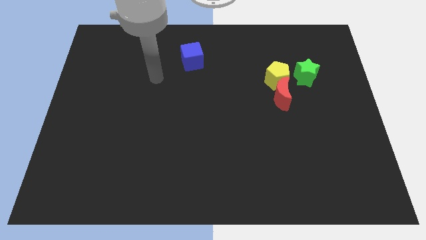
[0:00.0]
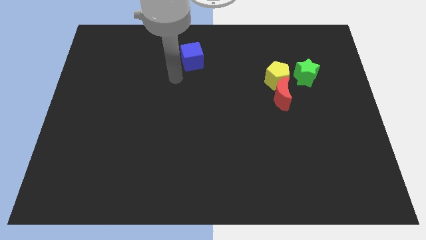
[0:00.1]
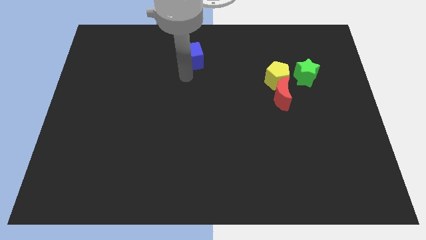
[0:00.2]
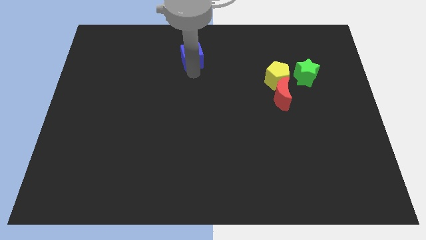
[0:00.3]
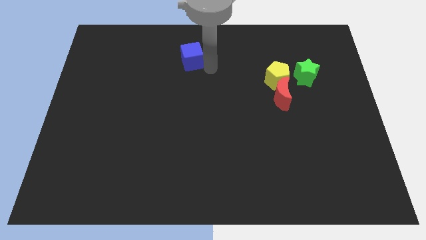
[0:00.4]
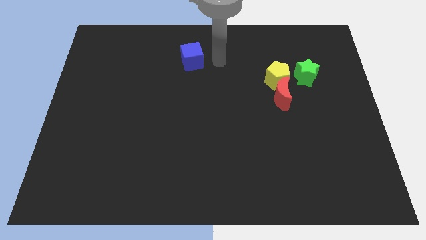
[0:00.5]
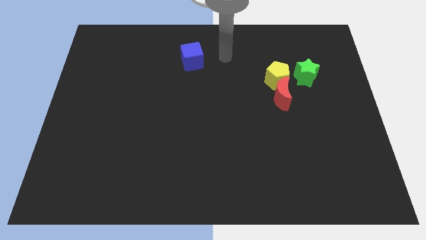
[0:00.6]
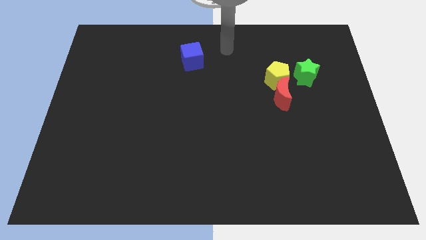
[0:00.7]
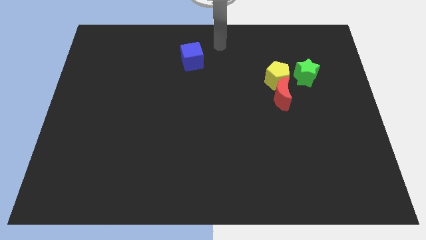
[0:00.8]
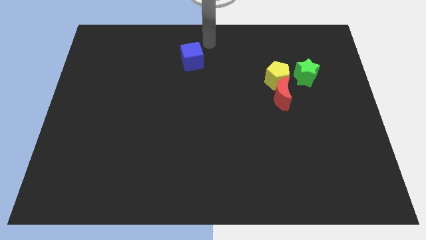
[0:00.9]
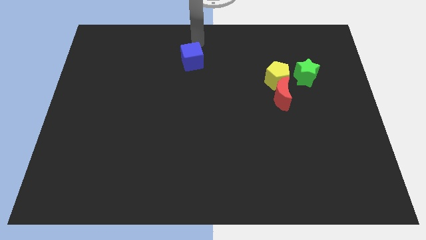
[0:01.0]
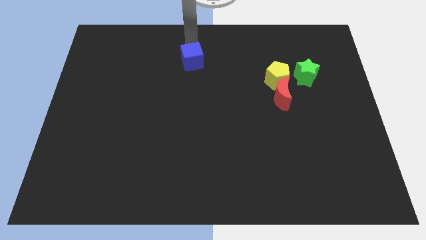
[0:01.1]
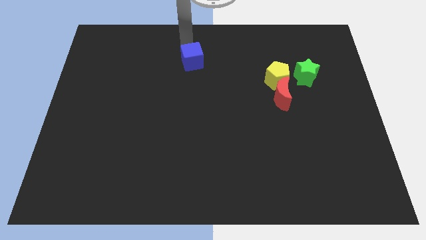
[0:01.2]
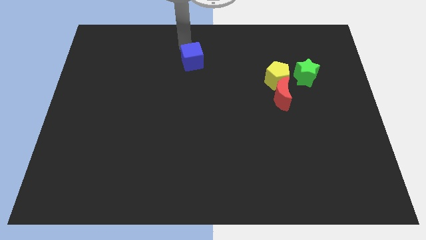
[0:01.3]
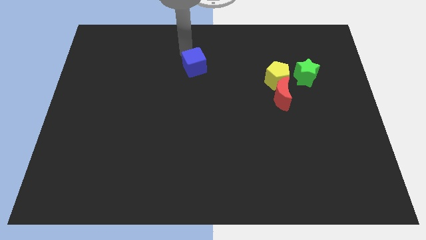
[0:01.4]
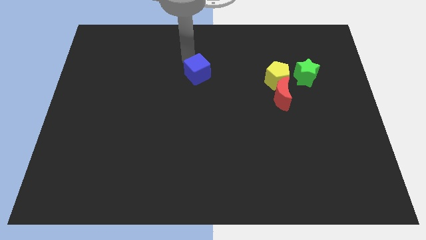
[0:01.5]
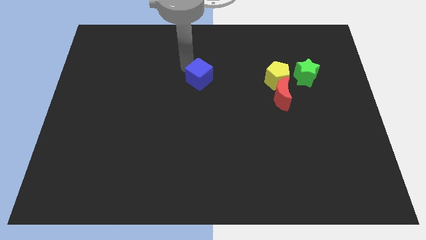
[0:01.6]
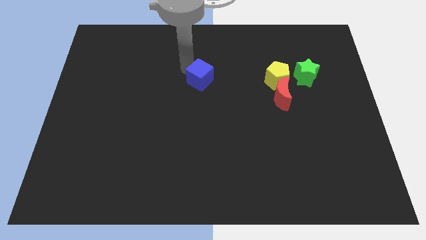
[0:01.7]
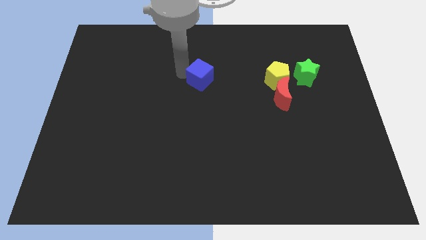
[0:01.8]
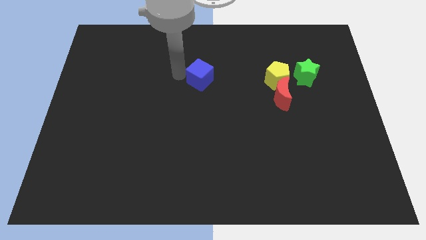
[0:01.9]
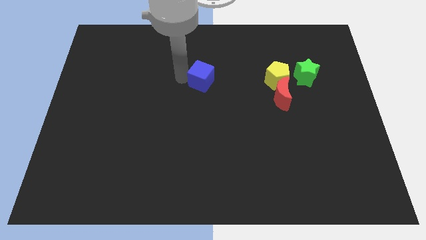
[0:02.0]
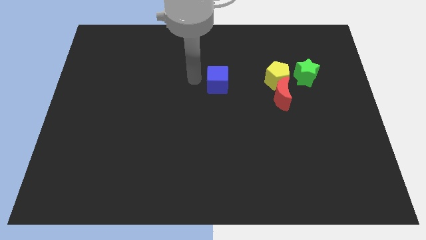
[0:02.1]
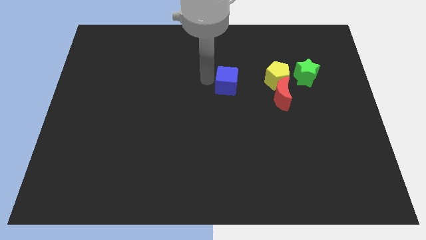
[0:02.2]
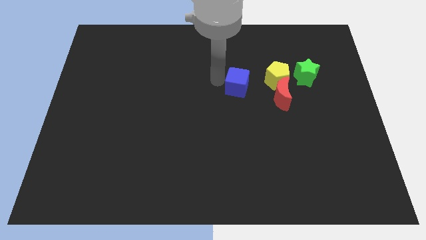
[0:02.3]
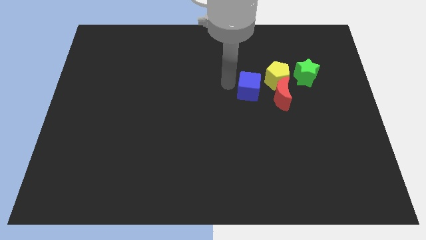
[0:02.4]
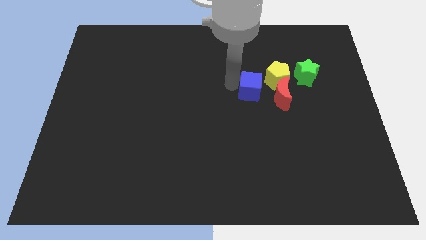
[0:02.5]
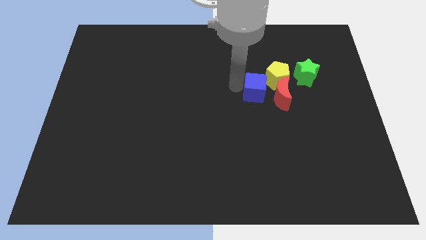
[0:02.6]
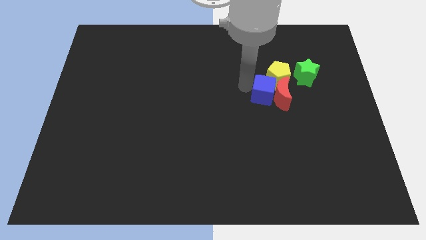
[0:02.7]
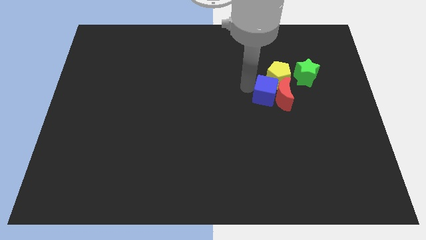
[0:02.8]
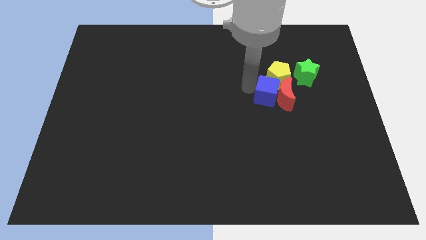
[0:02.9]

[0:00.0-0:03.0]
move the blue cube towards the red block

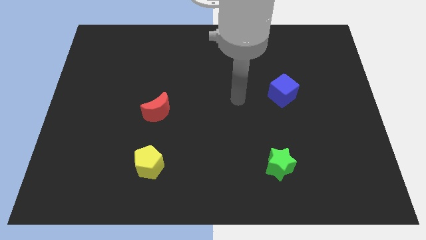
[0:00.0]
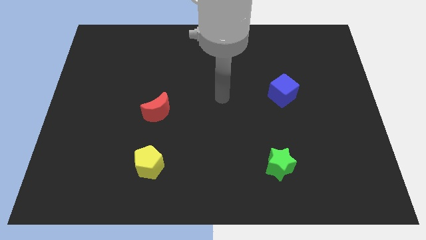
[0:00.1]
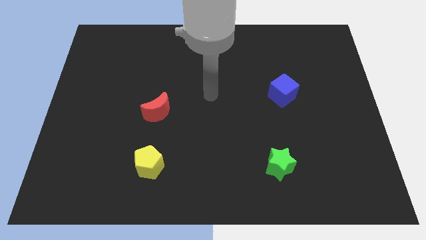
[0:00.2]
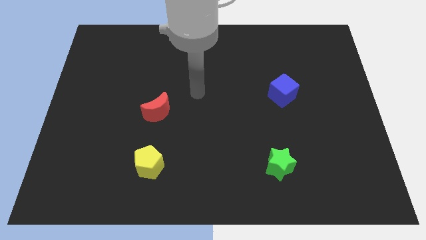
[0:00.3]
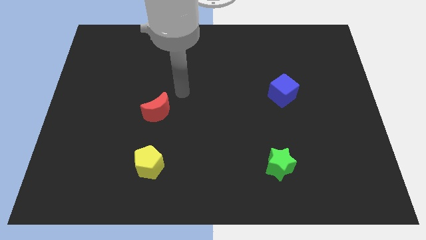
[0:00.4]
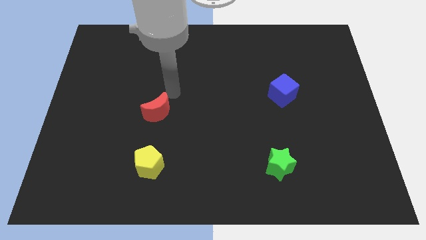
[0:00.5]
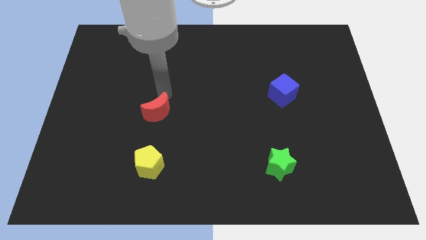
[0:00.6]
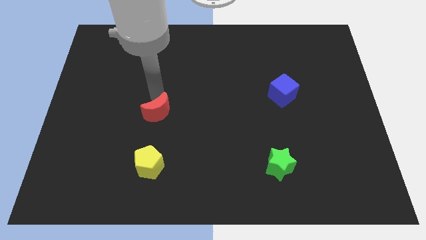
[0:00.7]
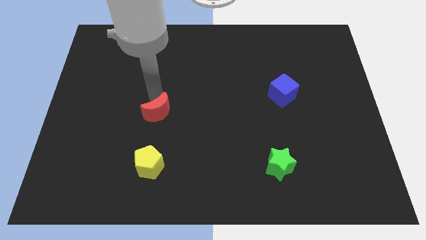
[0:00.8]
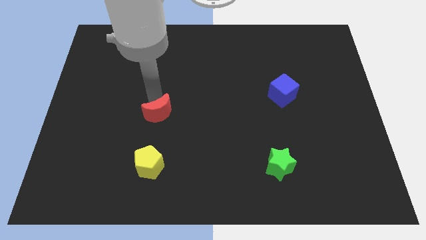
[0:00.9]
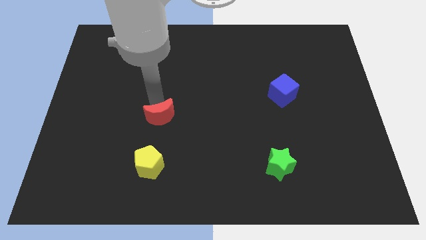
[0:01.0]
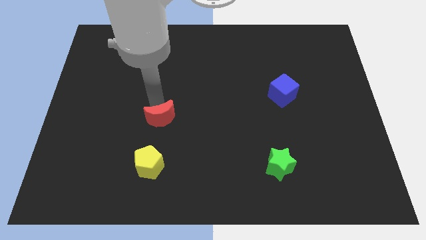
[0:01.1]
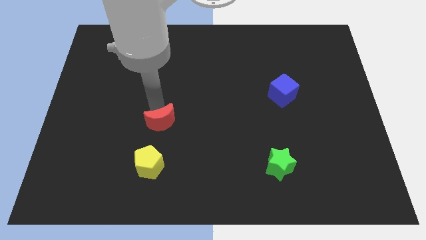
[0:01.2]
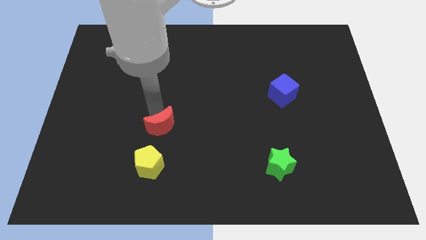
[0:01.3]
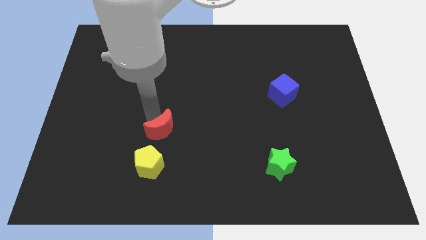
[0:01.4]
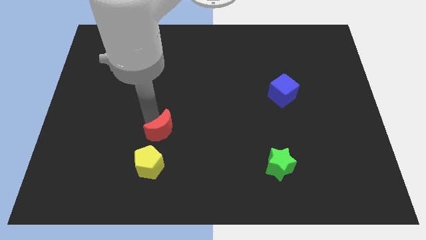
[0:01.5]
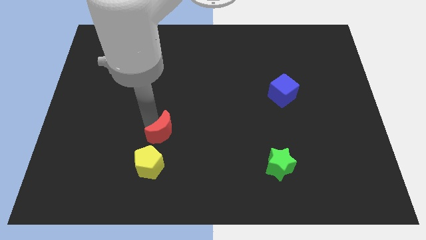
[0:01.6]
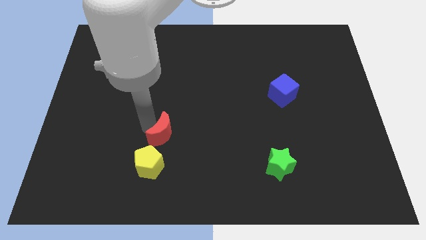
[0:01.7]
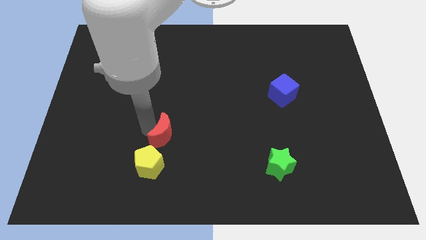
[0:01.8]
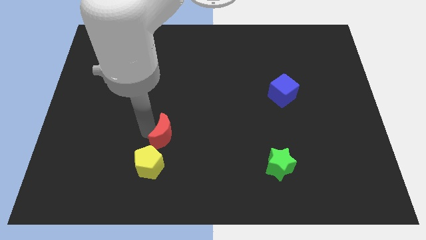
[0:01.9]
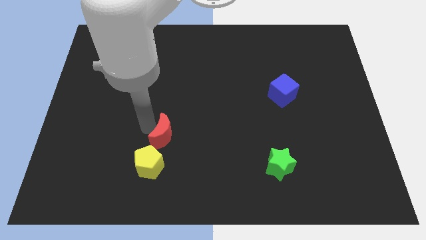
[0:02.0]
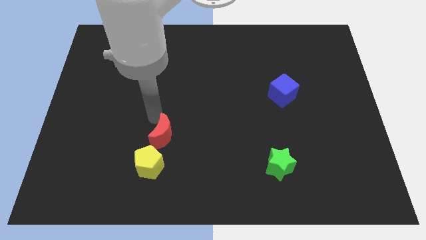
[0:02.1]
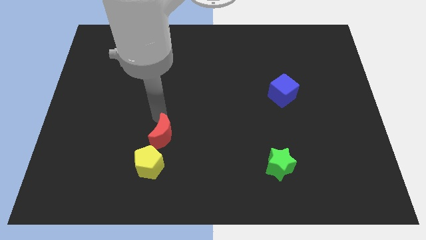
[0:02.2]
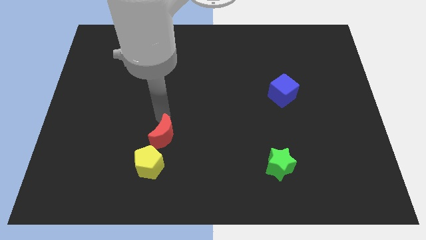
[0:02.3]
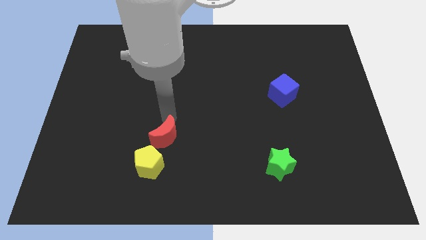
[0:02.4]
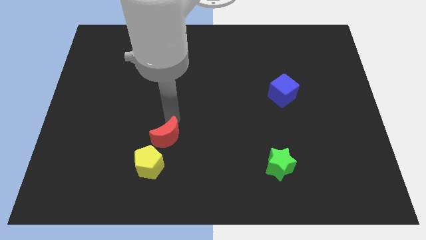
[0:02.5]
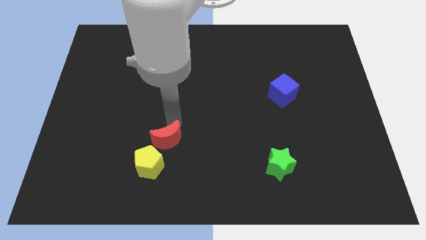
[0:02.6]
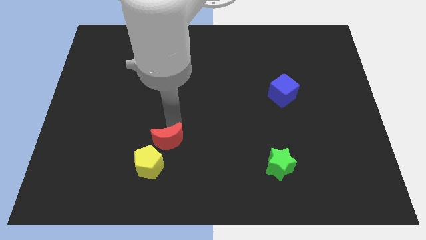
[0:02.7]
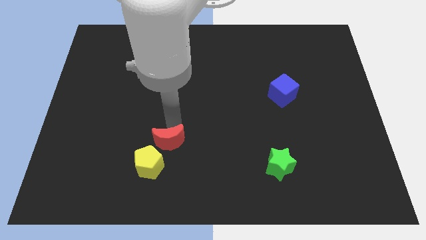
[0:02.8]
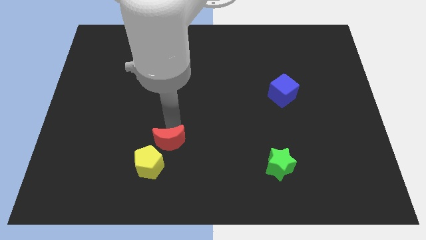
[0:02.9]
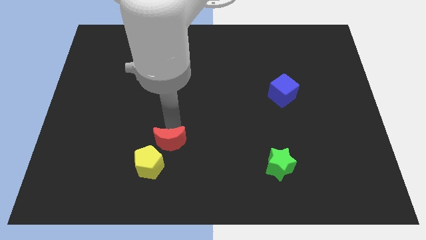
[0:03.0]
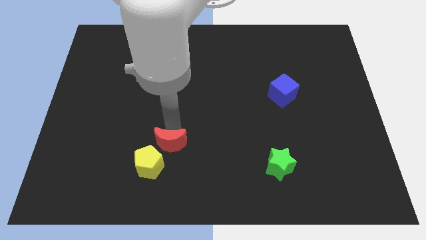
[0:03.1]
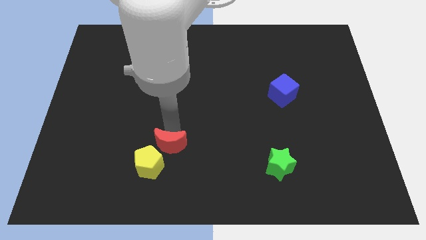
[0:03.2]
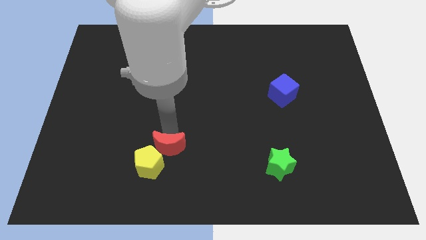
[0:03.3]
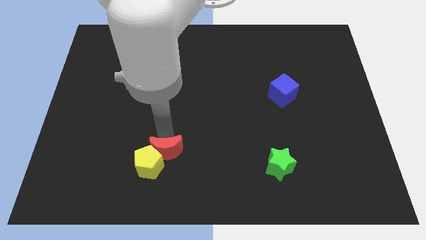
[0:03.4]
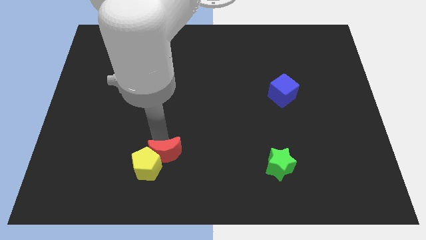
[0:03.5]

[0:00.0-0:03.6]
push the red block to the yellow block

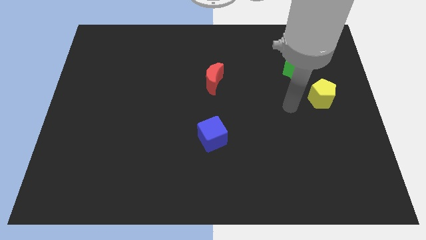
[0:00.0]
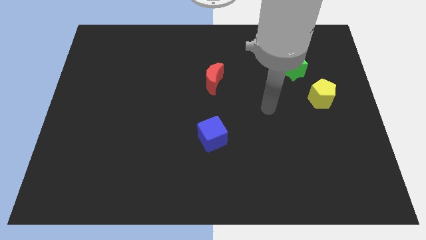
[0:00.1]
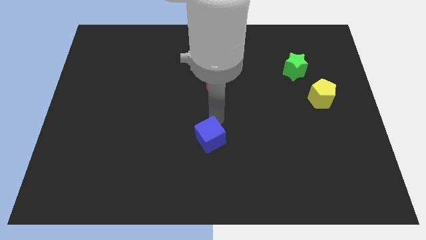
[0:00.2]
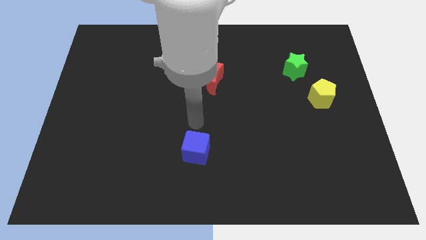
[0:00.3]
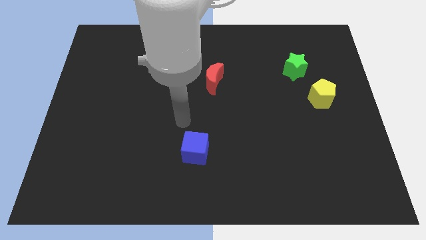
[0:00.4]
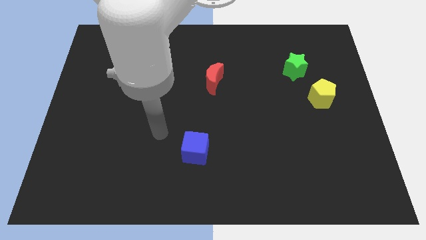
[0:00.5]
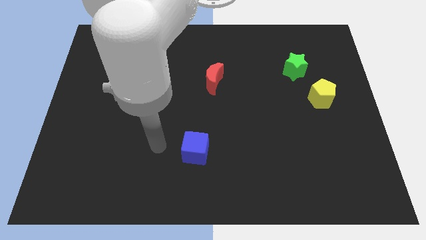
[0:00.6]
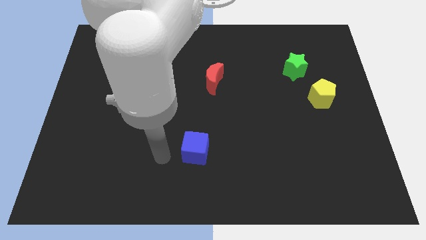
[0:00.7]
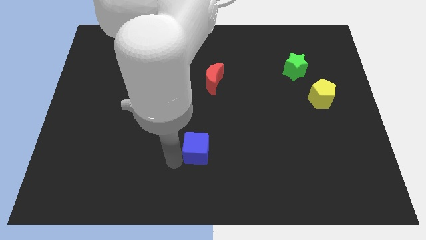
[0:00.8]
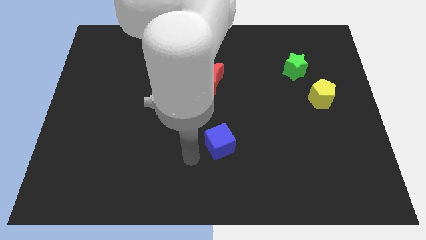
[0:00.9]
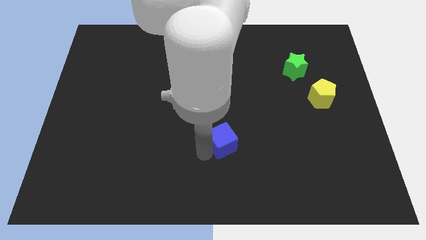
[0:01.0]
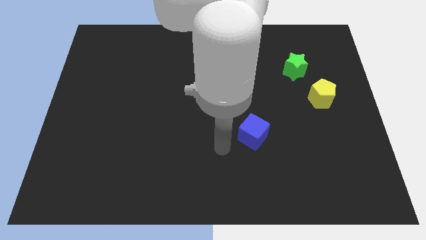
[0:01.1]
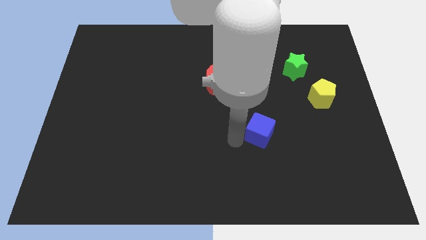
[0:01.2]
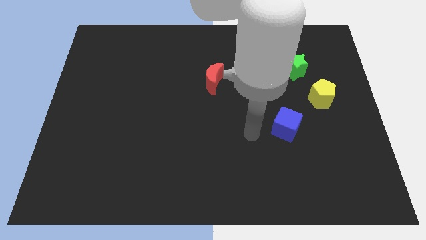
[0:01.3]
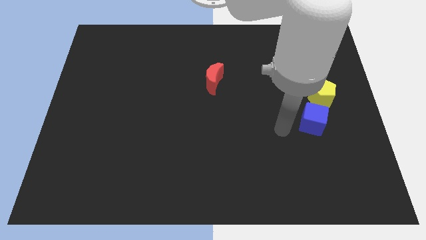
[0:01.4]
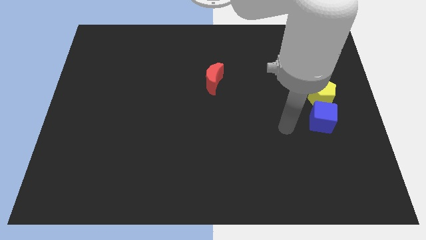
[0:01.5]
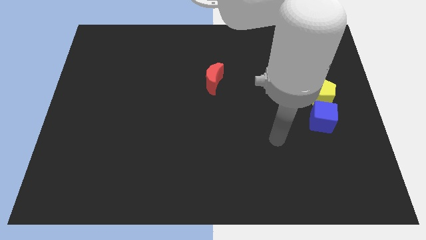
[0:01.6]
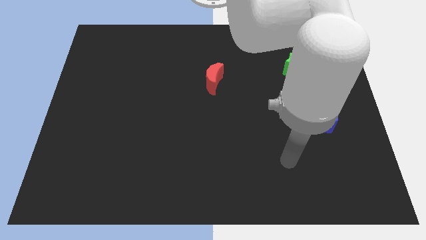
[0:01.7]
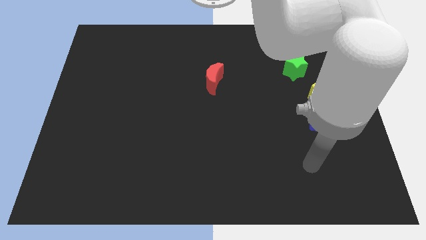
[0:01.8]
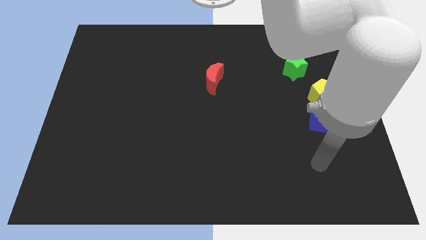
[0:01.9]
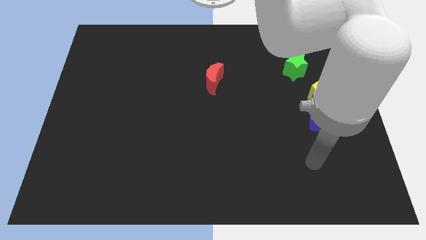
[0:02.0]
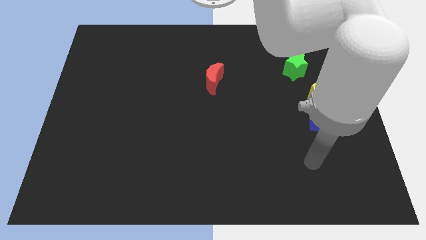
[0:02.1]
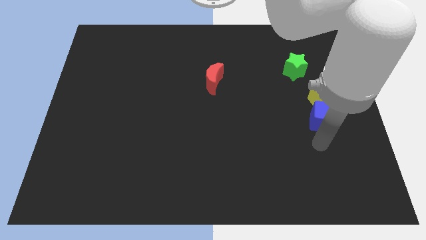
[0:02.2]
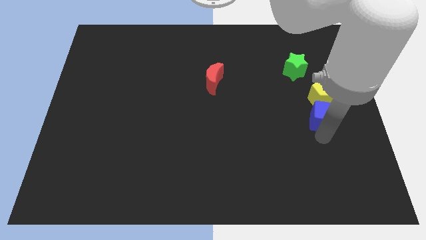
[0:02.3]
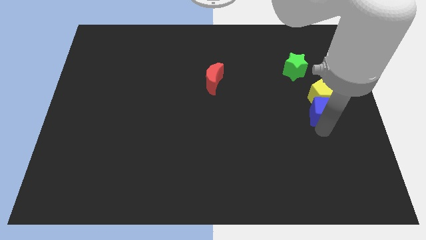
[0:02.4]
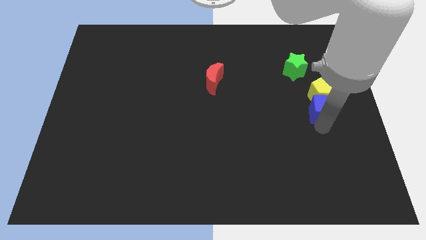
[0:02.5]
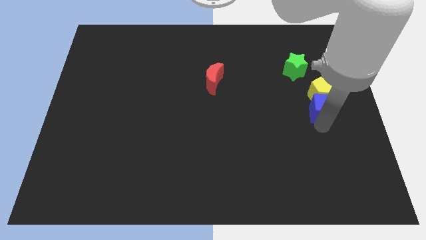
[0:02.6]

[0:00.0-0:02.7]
move the blue cube close to the yellow block
